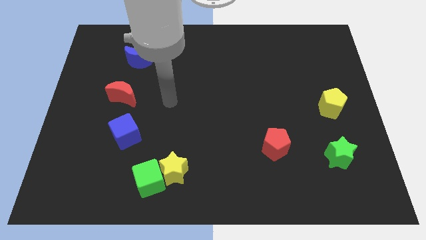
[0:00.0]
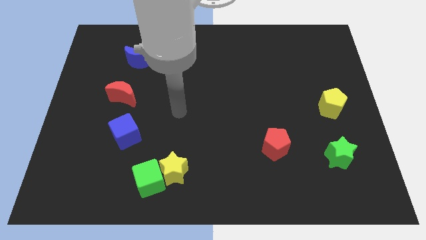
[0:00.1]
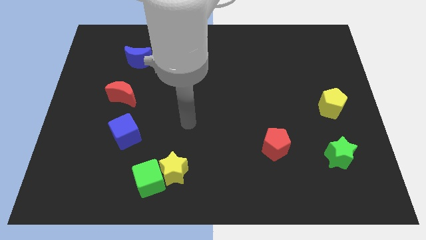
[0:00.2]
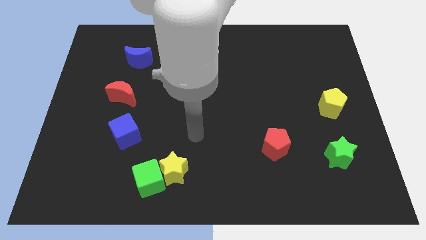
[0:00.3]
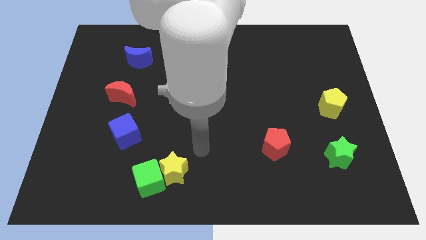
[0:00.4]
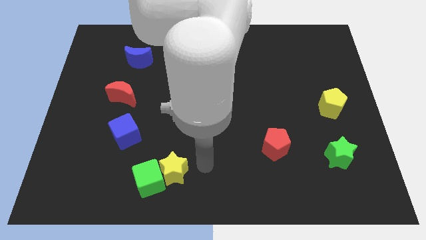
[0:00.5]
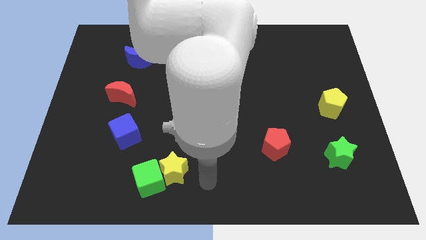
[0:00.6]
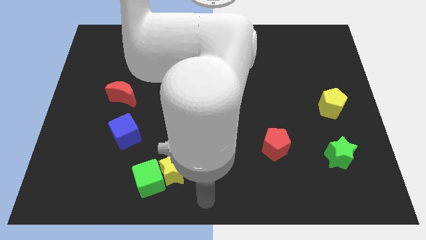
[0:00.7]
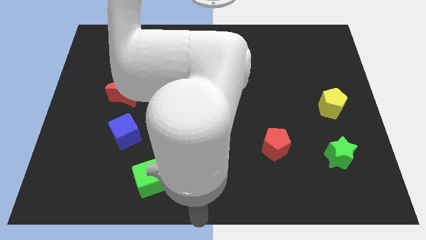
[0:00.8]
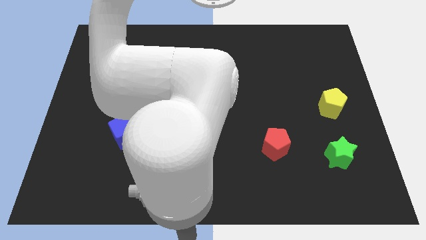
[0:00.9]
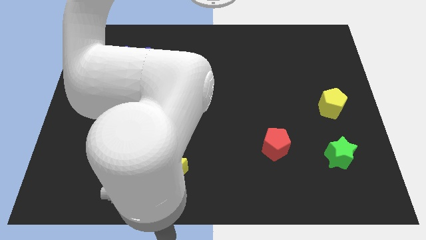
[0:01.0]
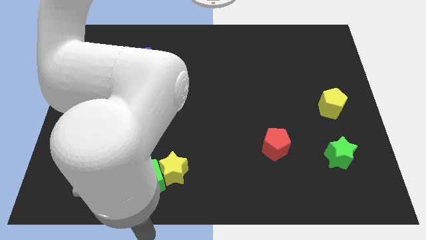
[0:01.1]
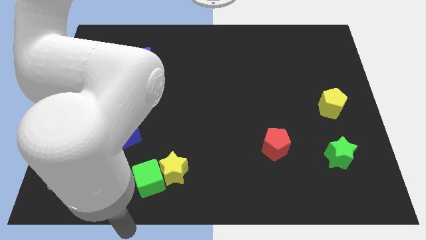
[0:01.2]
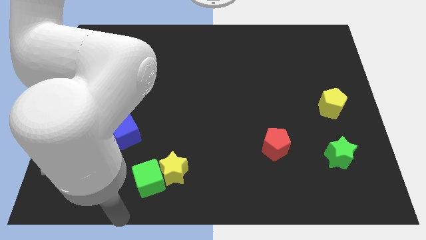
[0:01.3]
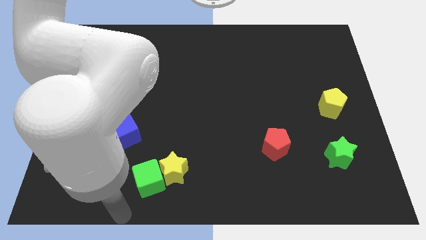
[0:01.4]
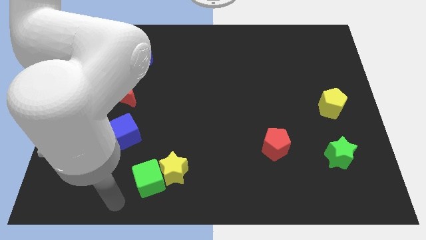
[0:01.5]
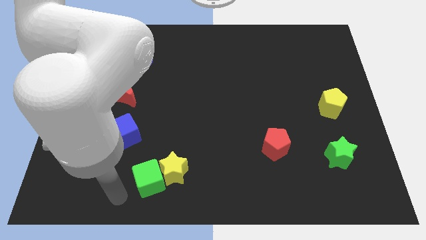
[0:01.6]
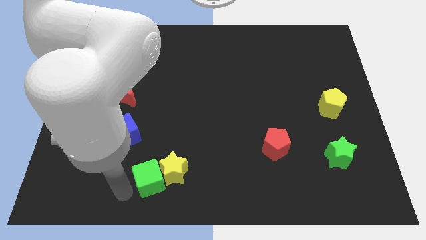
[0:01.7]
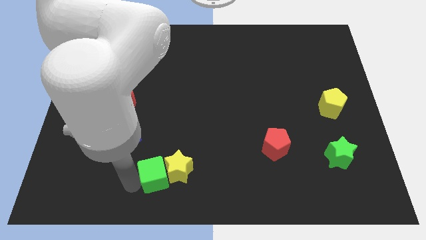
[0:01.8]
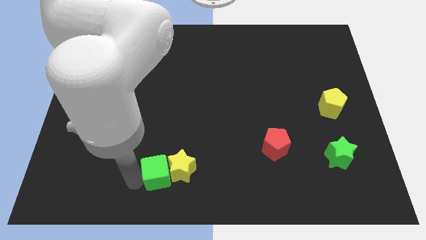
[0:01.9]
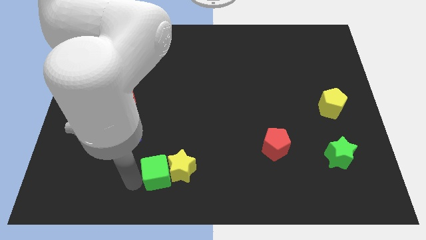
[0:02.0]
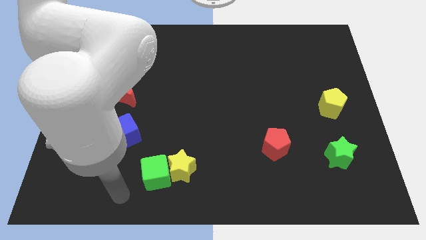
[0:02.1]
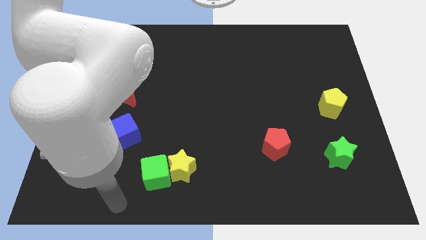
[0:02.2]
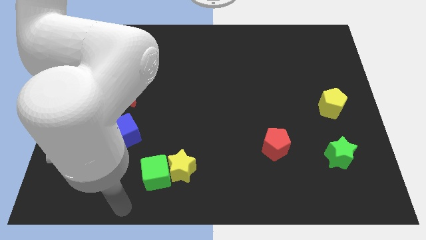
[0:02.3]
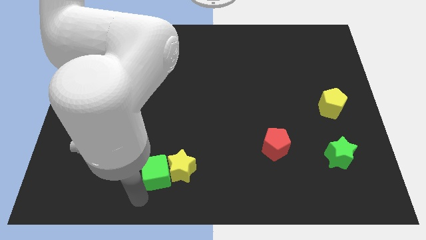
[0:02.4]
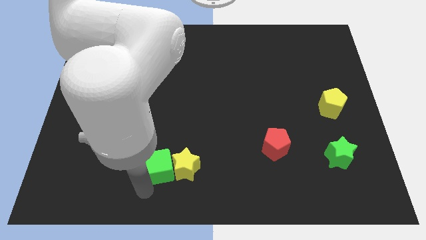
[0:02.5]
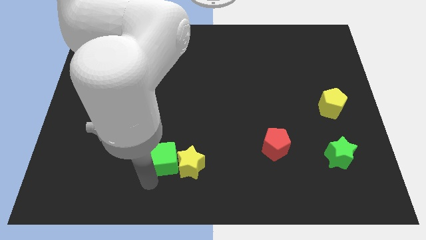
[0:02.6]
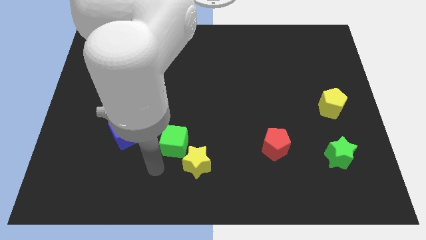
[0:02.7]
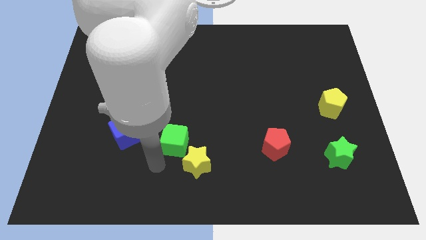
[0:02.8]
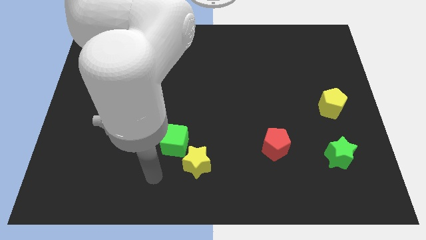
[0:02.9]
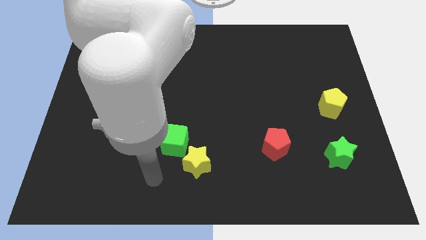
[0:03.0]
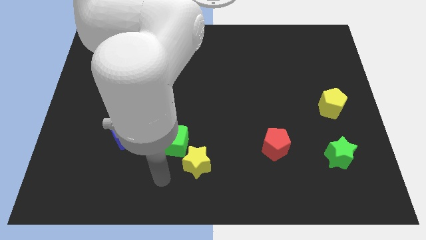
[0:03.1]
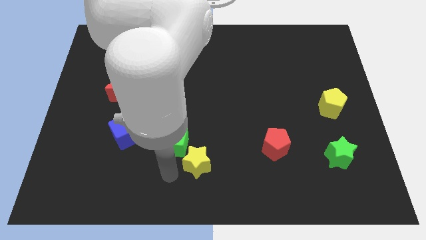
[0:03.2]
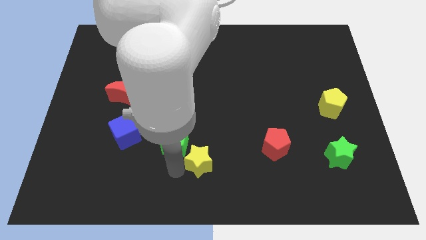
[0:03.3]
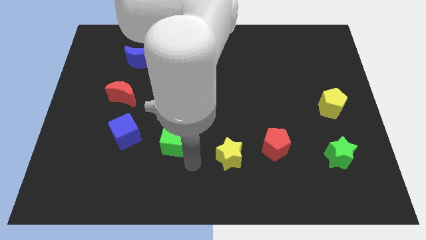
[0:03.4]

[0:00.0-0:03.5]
separate the green cube and yellow star

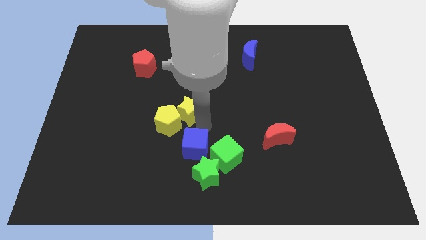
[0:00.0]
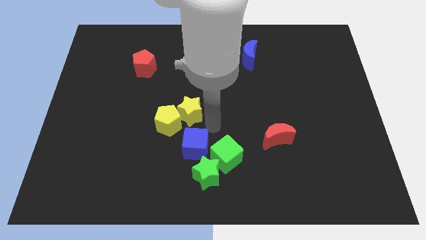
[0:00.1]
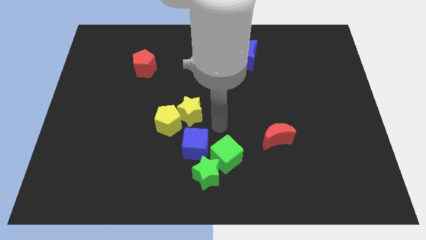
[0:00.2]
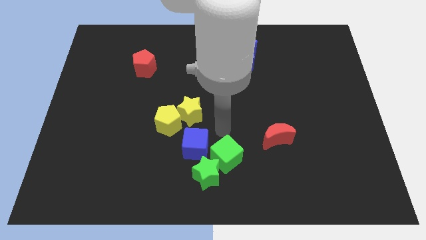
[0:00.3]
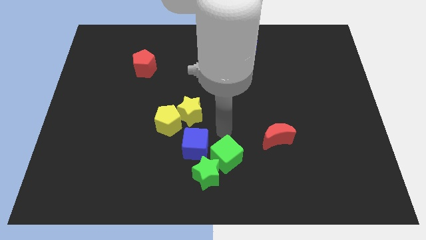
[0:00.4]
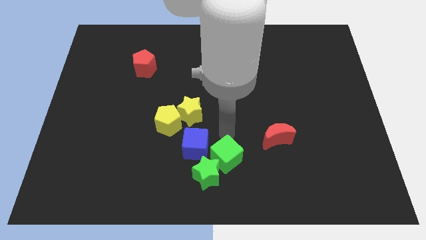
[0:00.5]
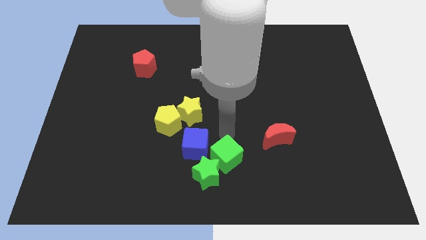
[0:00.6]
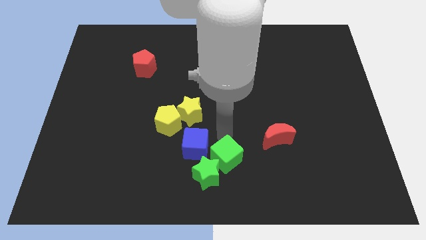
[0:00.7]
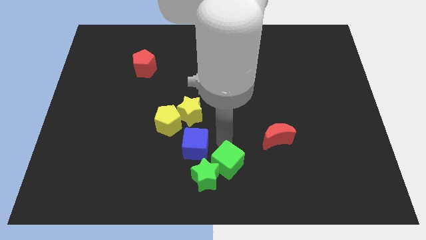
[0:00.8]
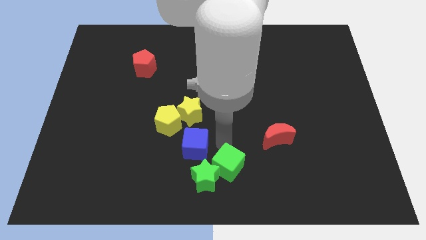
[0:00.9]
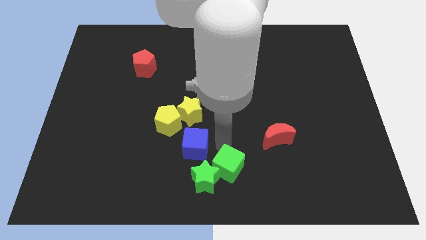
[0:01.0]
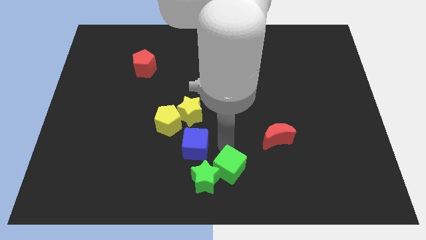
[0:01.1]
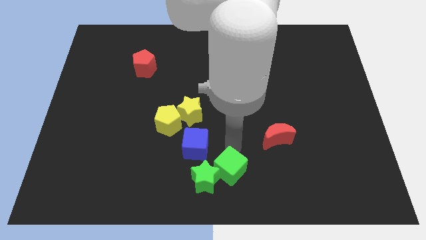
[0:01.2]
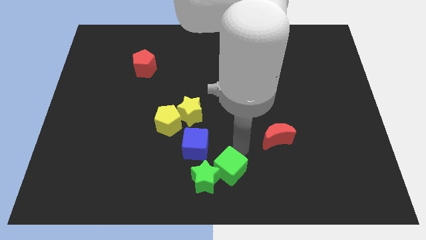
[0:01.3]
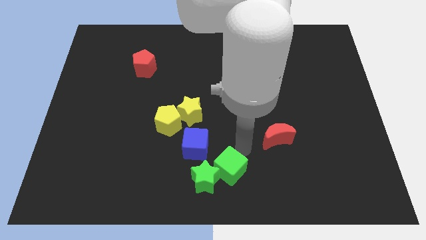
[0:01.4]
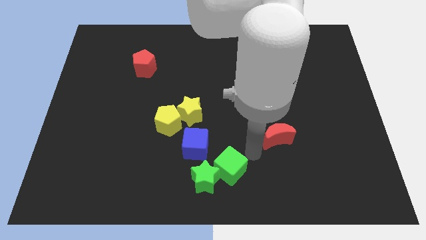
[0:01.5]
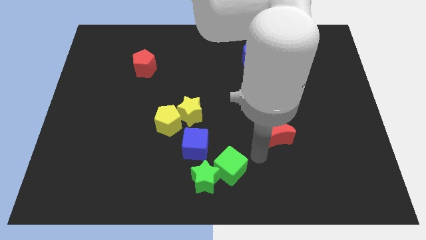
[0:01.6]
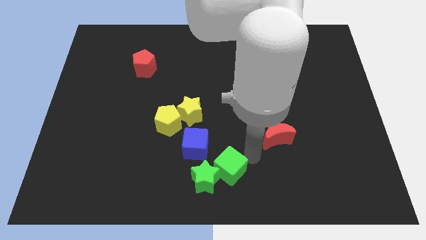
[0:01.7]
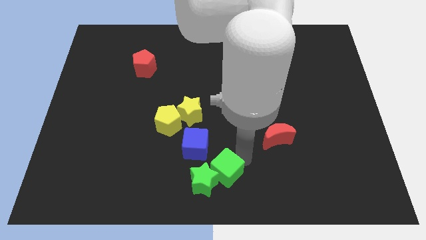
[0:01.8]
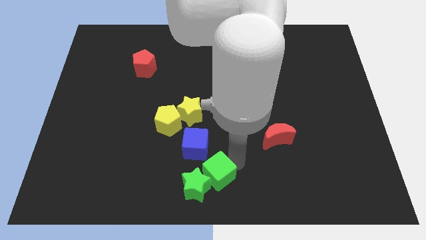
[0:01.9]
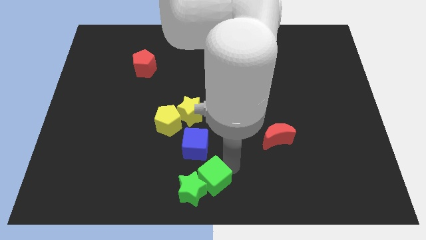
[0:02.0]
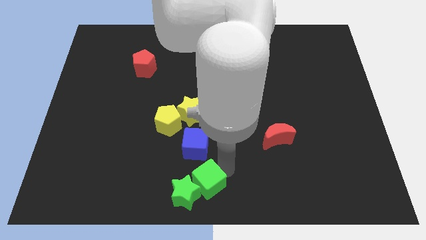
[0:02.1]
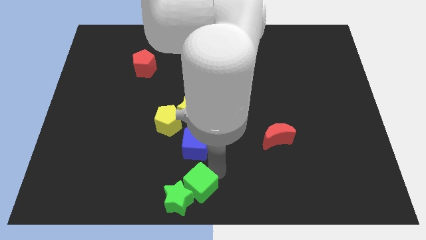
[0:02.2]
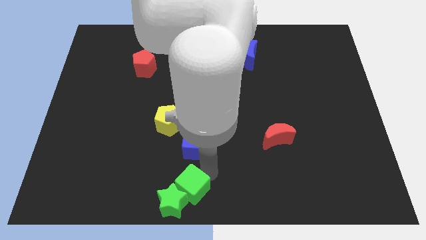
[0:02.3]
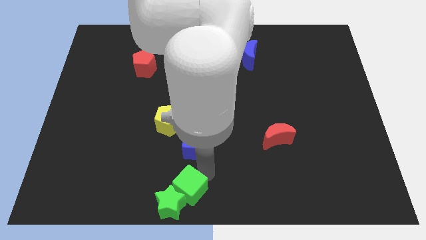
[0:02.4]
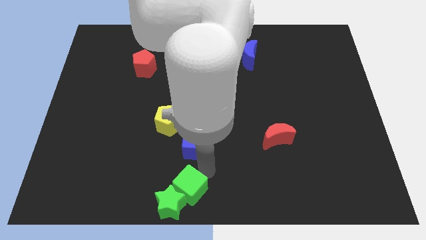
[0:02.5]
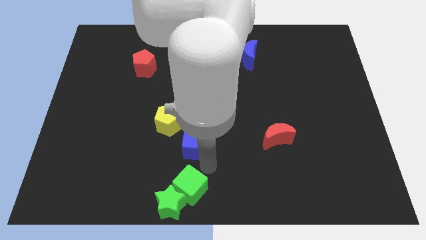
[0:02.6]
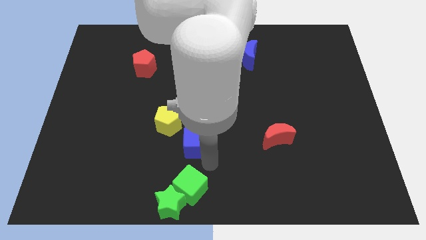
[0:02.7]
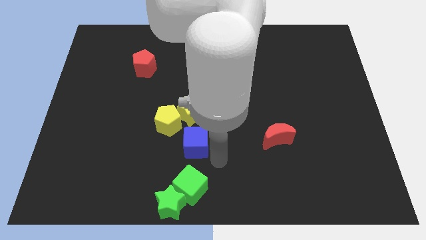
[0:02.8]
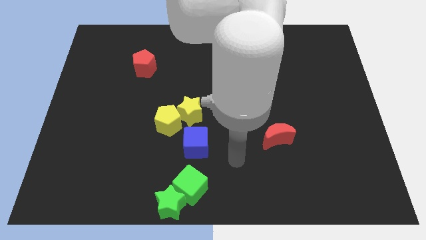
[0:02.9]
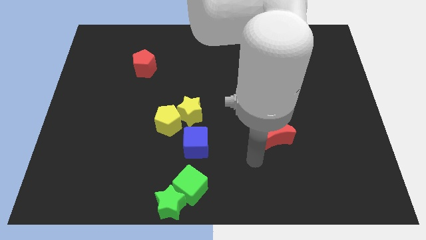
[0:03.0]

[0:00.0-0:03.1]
move the green cube and star to the bottom side of the table

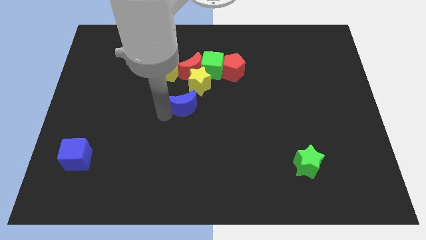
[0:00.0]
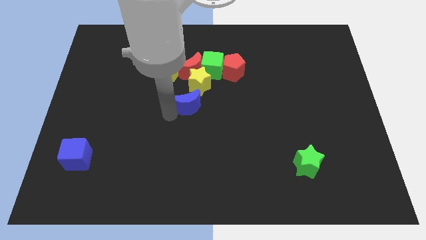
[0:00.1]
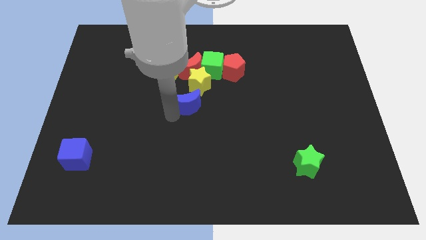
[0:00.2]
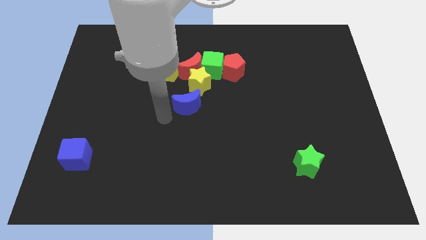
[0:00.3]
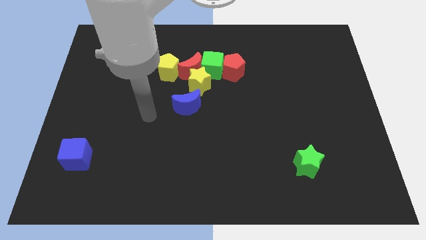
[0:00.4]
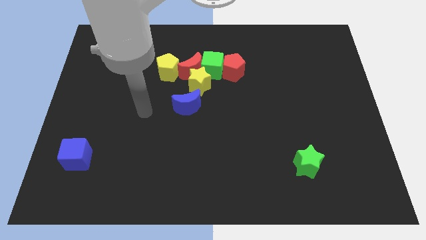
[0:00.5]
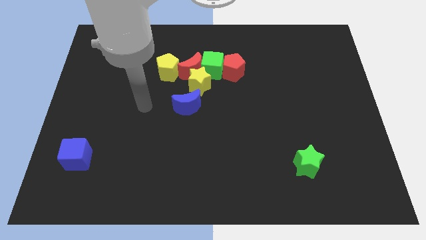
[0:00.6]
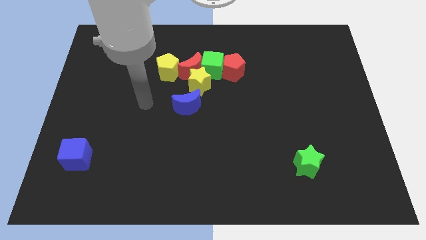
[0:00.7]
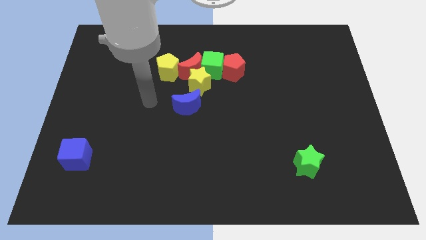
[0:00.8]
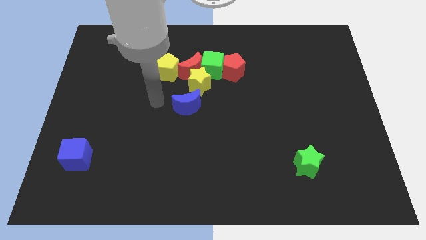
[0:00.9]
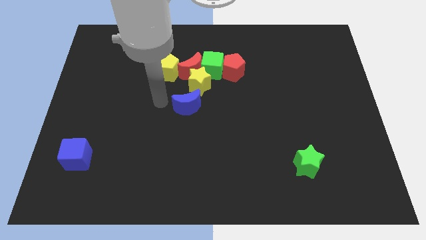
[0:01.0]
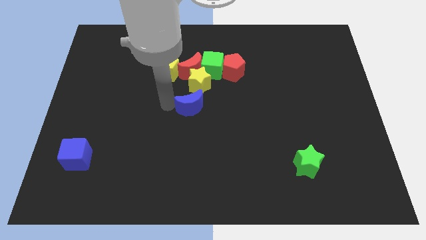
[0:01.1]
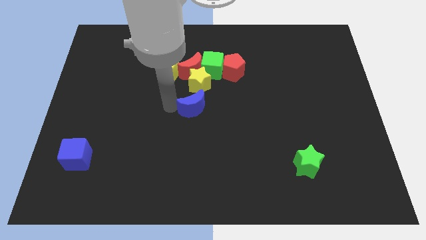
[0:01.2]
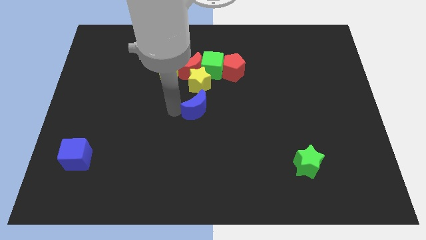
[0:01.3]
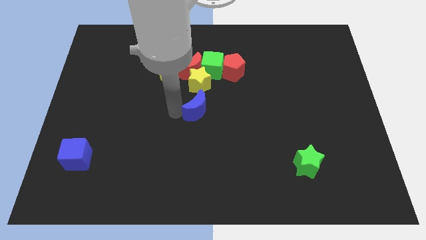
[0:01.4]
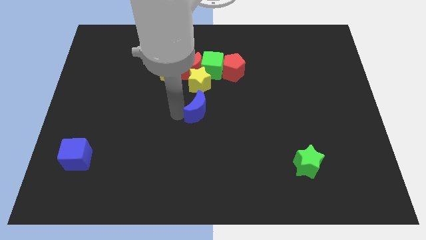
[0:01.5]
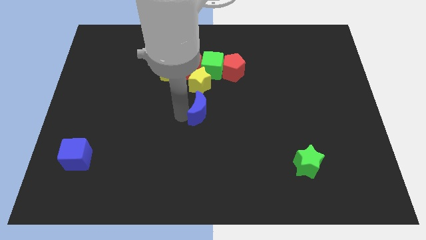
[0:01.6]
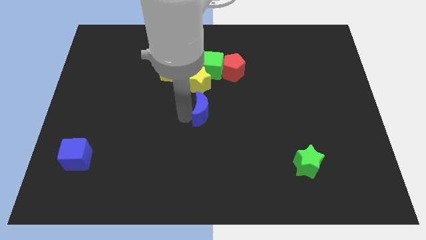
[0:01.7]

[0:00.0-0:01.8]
place the blue moon below the yellow star

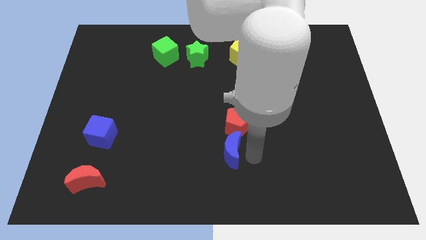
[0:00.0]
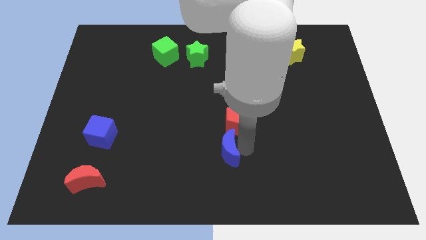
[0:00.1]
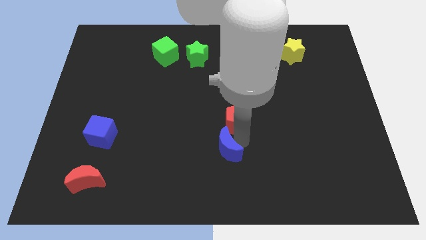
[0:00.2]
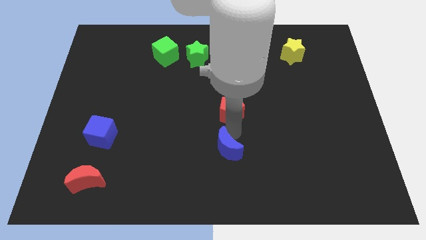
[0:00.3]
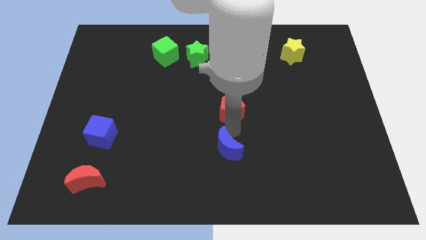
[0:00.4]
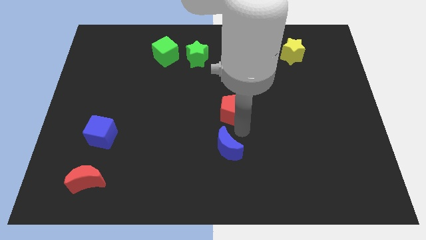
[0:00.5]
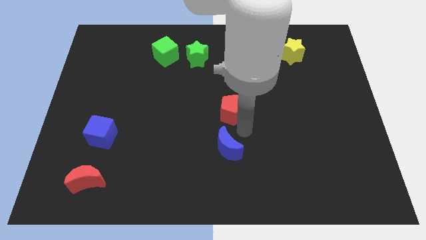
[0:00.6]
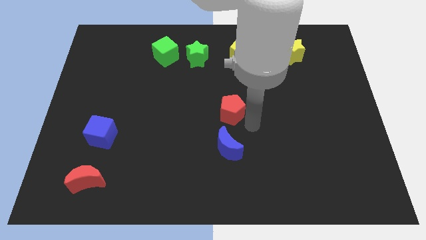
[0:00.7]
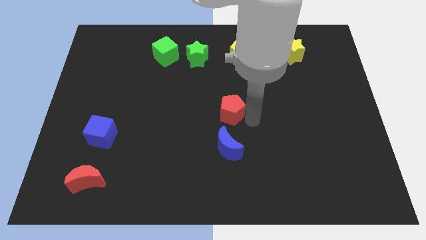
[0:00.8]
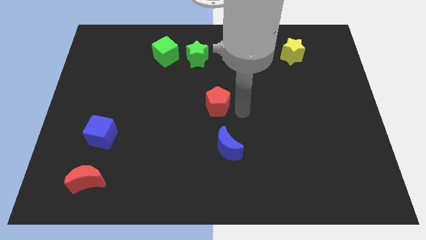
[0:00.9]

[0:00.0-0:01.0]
separate the red pentagon from the blue moon
